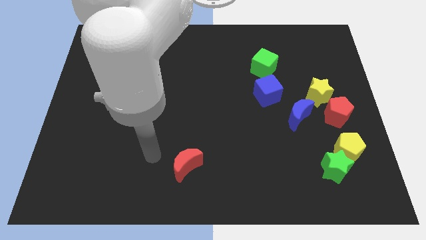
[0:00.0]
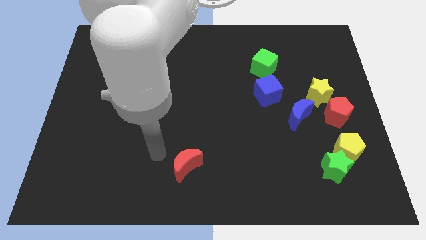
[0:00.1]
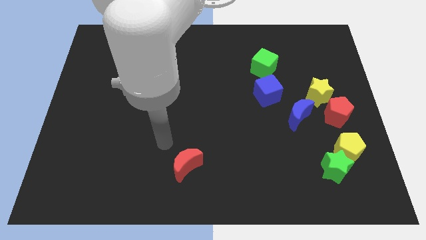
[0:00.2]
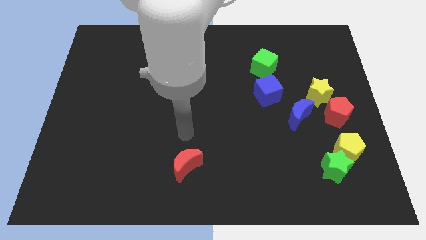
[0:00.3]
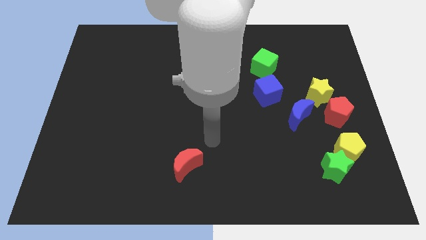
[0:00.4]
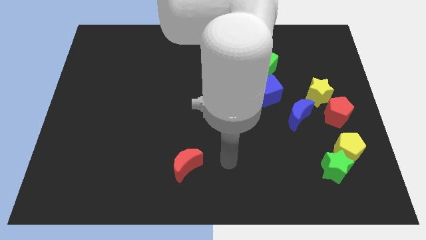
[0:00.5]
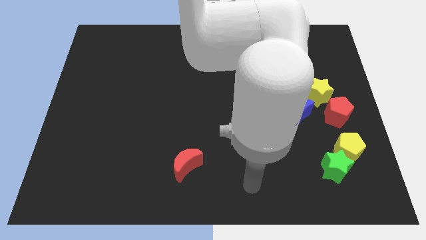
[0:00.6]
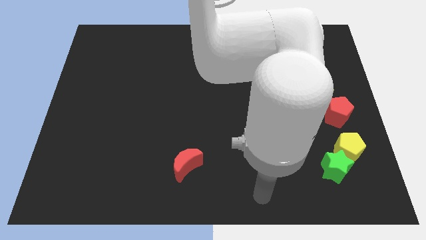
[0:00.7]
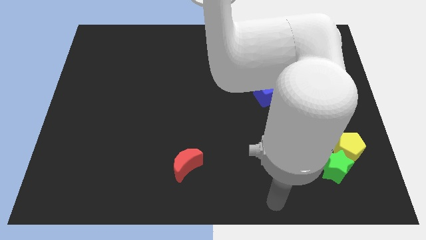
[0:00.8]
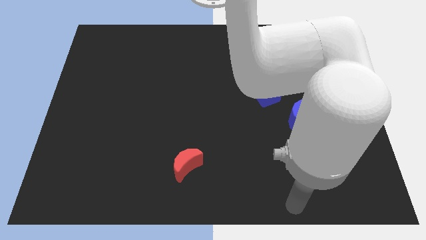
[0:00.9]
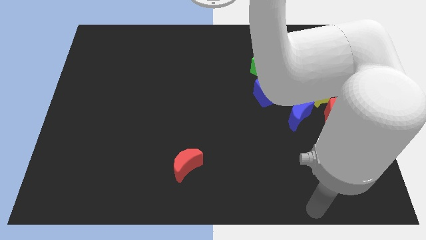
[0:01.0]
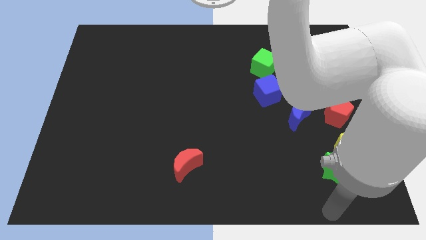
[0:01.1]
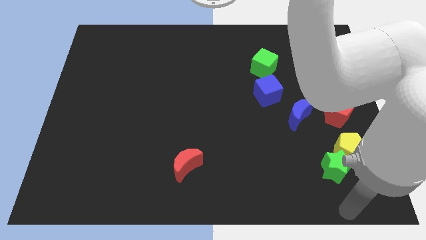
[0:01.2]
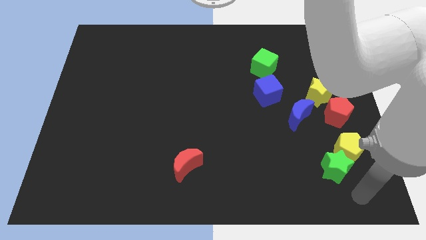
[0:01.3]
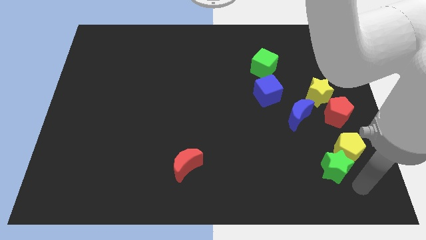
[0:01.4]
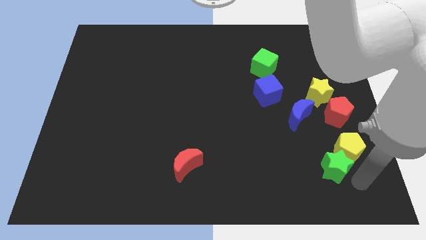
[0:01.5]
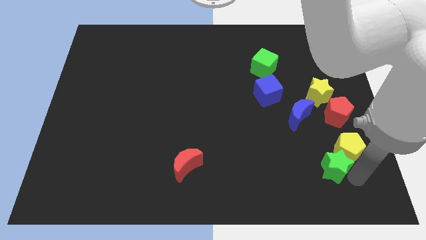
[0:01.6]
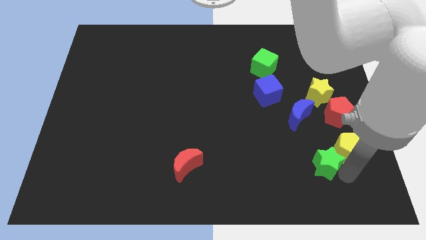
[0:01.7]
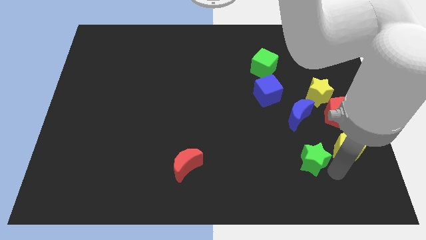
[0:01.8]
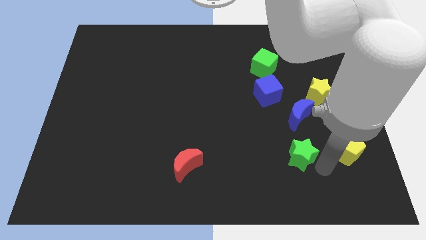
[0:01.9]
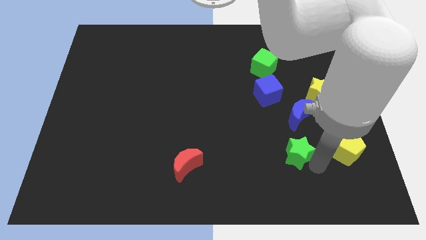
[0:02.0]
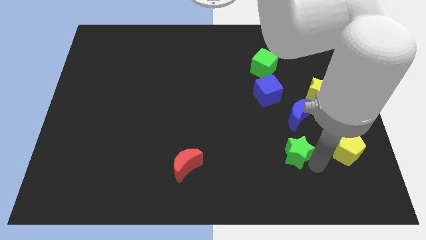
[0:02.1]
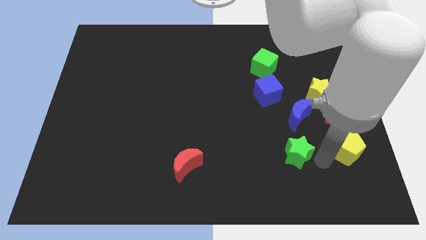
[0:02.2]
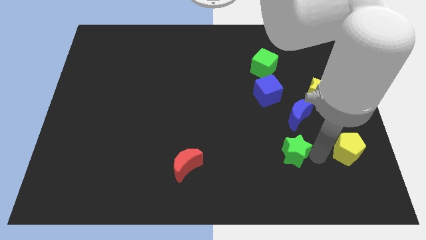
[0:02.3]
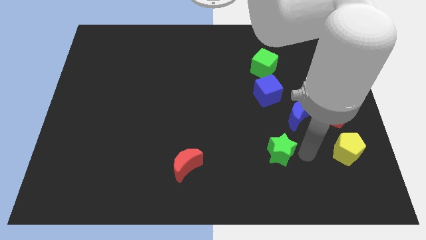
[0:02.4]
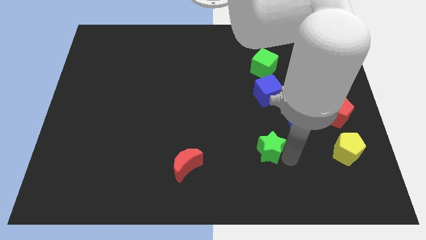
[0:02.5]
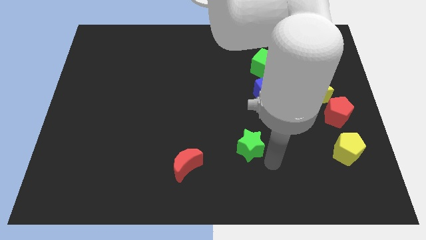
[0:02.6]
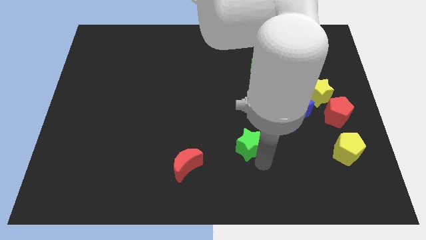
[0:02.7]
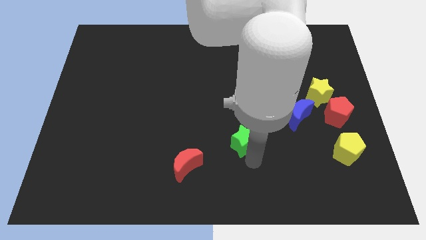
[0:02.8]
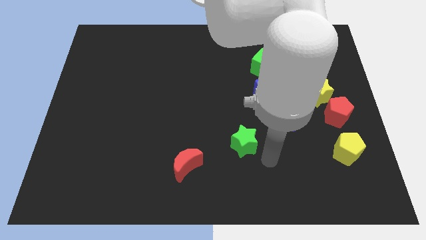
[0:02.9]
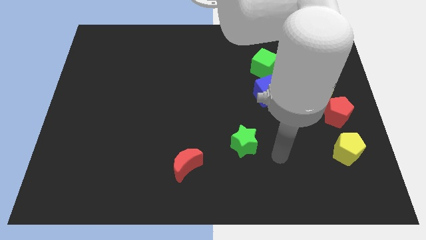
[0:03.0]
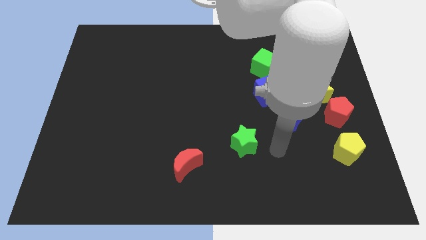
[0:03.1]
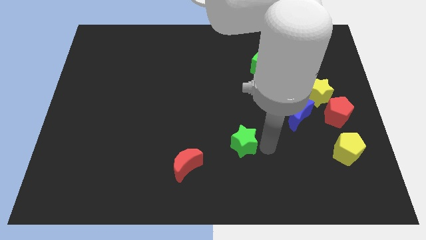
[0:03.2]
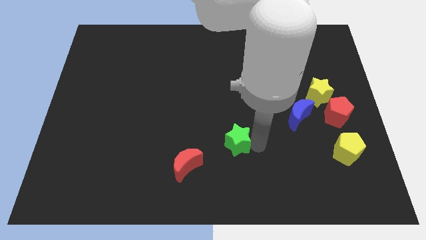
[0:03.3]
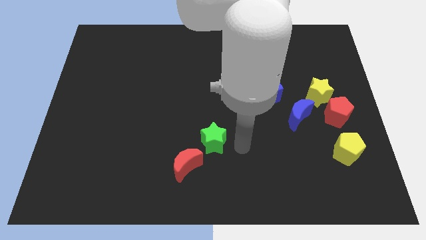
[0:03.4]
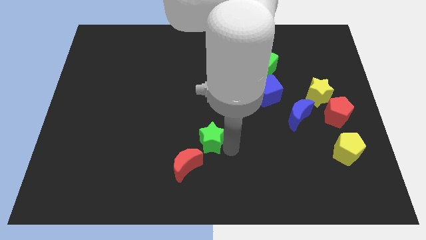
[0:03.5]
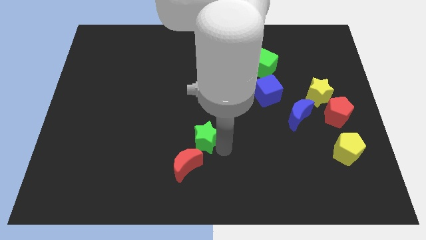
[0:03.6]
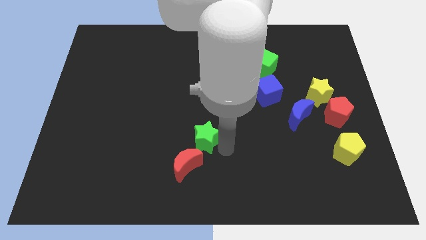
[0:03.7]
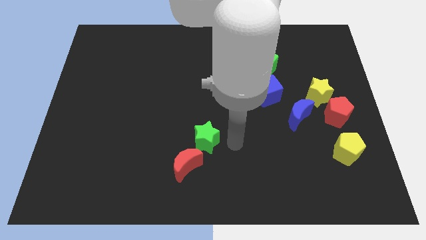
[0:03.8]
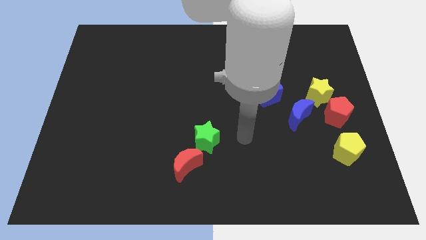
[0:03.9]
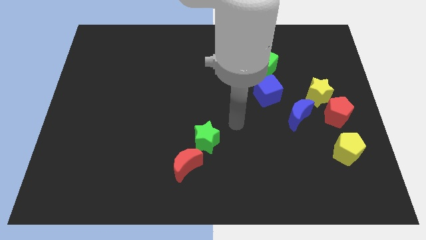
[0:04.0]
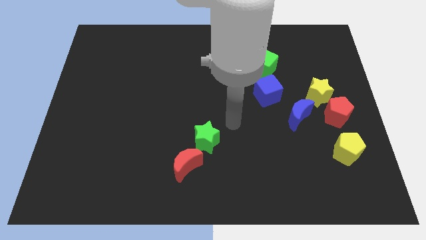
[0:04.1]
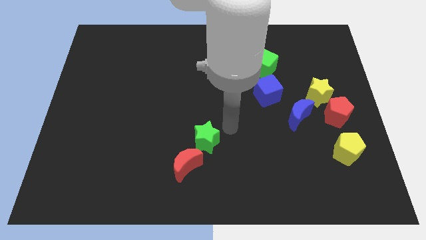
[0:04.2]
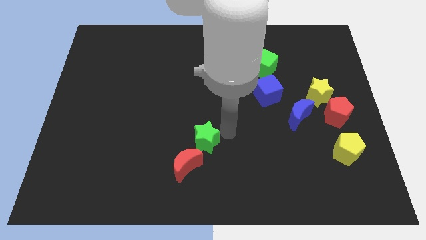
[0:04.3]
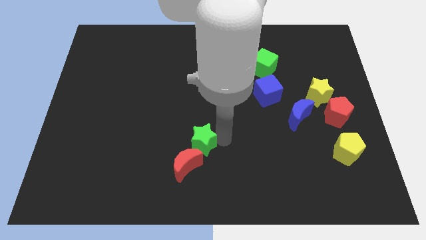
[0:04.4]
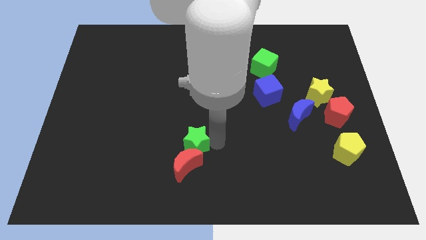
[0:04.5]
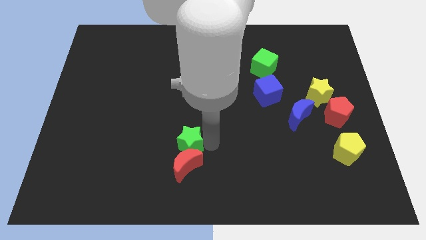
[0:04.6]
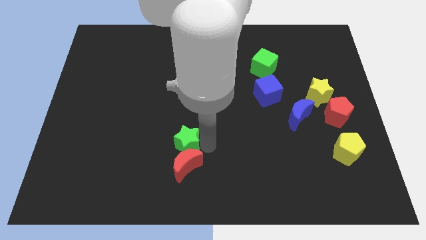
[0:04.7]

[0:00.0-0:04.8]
put the green star close to the red moon

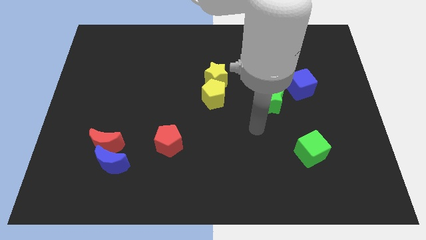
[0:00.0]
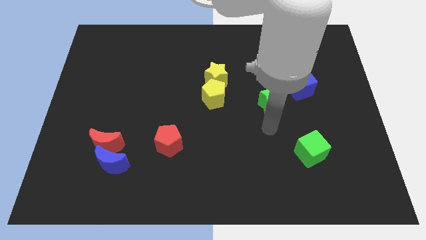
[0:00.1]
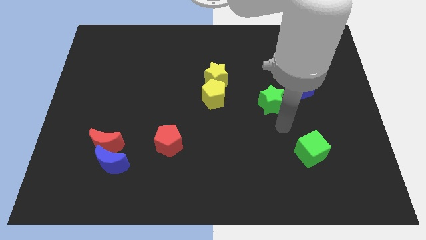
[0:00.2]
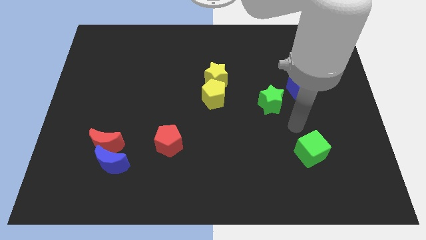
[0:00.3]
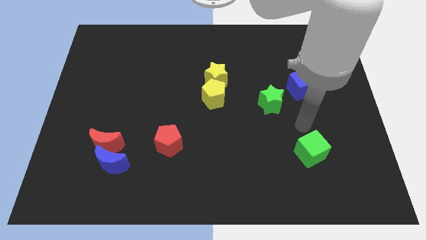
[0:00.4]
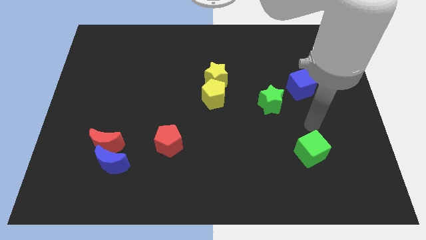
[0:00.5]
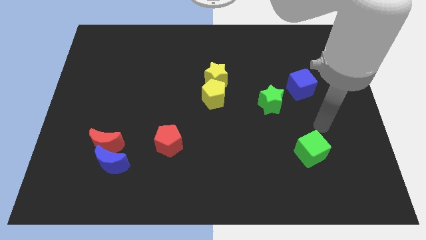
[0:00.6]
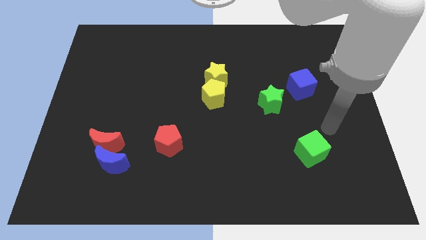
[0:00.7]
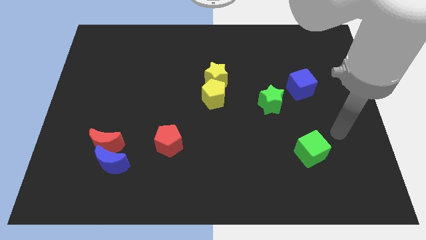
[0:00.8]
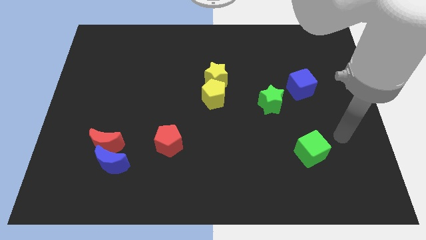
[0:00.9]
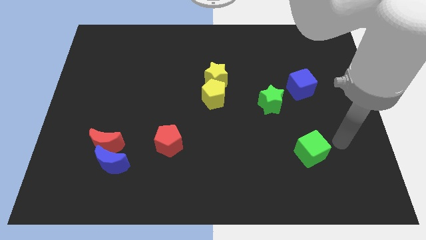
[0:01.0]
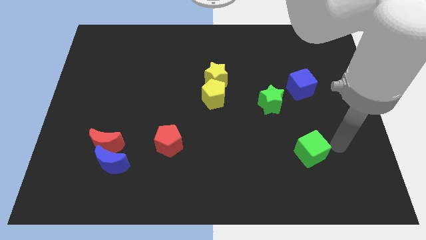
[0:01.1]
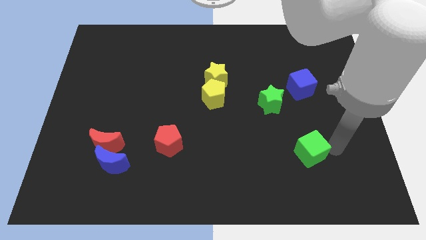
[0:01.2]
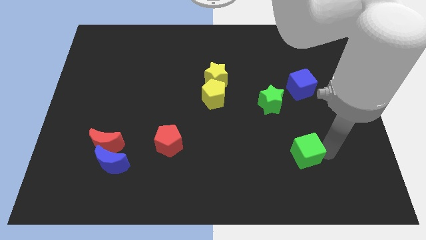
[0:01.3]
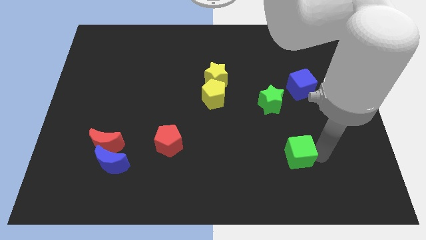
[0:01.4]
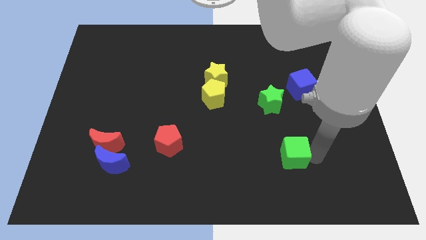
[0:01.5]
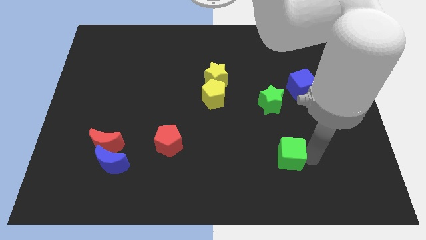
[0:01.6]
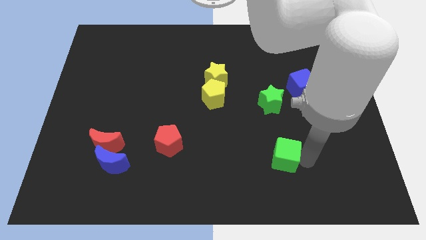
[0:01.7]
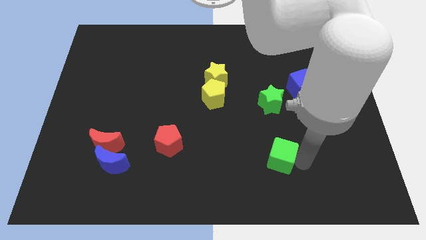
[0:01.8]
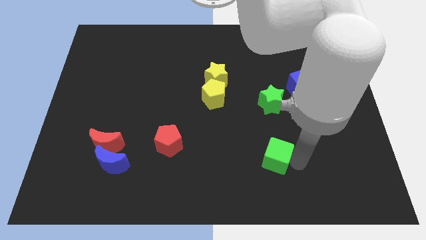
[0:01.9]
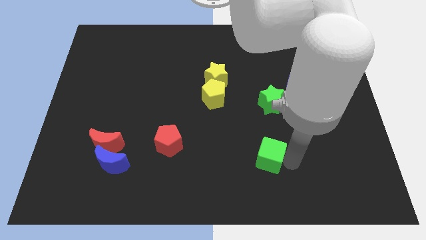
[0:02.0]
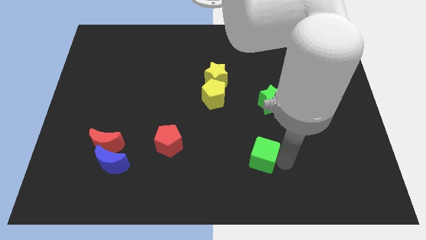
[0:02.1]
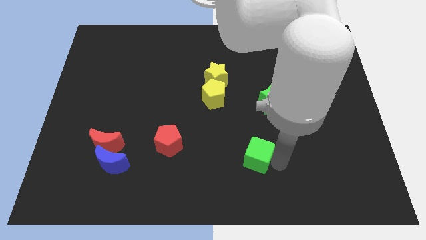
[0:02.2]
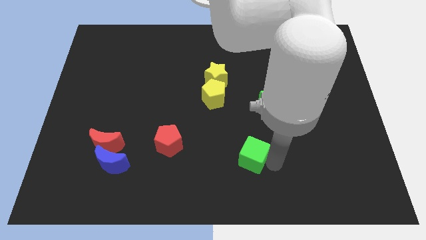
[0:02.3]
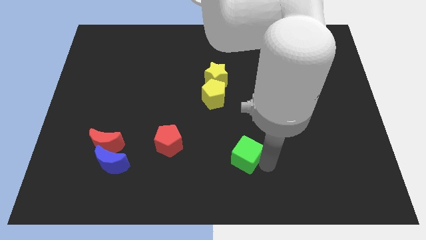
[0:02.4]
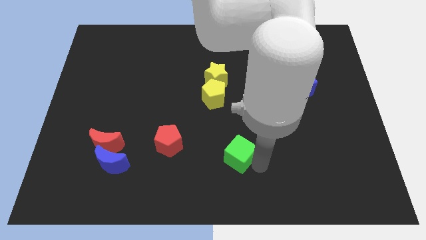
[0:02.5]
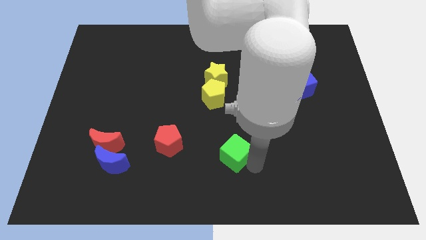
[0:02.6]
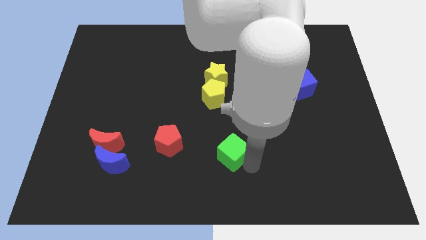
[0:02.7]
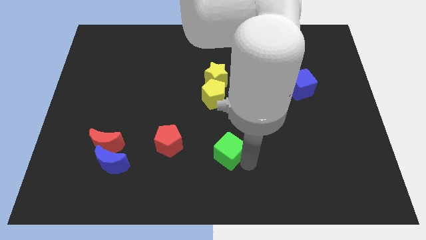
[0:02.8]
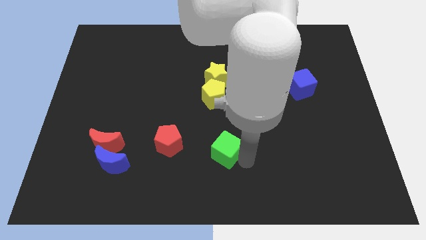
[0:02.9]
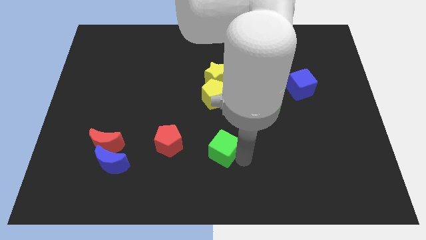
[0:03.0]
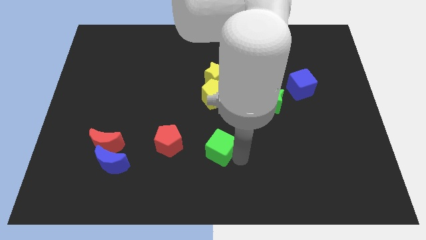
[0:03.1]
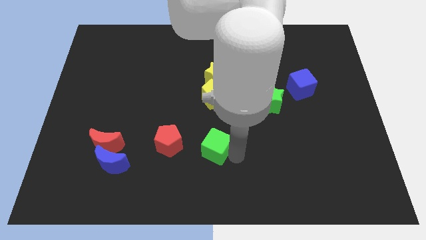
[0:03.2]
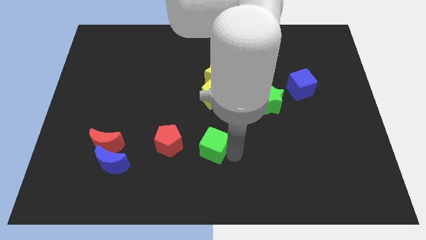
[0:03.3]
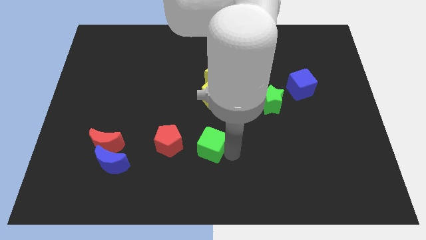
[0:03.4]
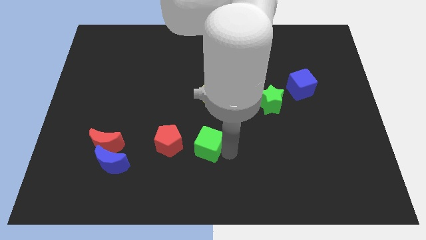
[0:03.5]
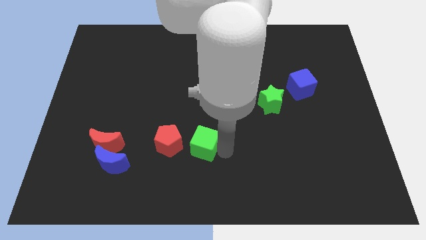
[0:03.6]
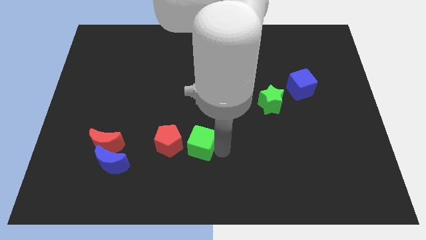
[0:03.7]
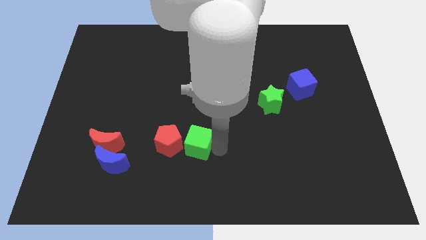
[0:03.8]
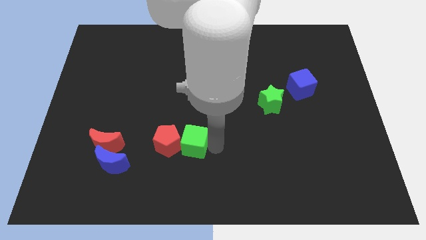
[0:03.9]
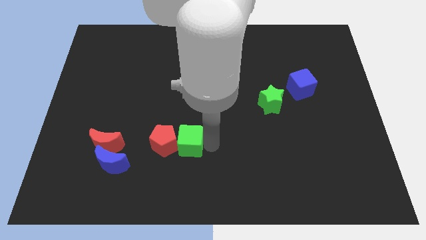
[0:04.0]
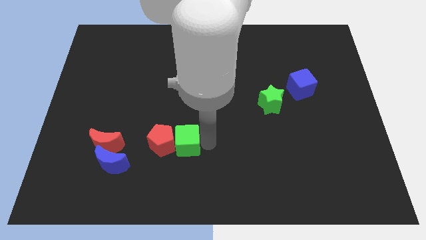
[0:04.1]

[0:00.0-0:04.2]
slide the green cube next to the red pentagon
